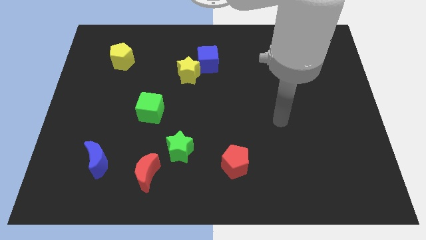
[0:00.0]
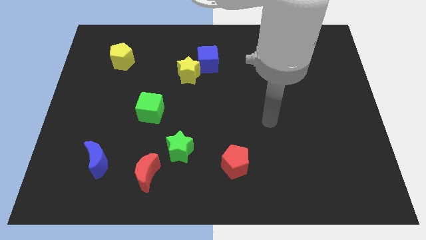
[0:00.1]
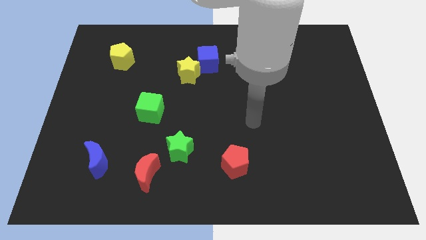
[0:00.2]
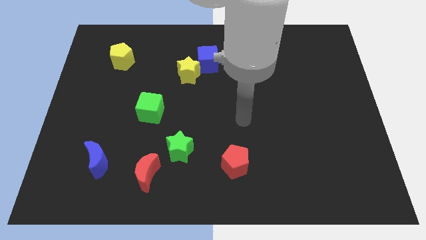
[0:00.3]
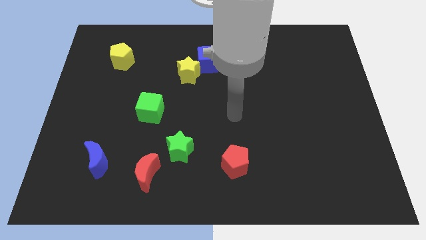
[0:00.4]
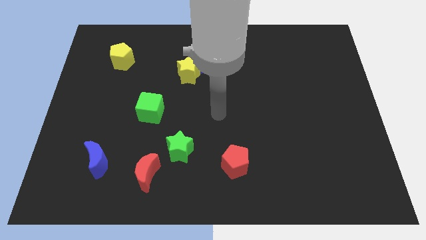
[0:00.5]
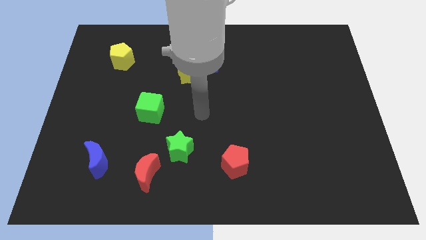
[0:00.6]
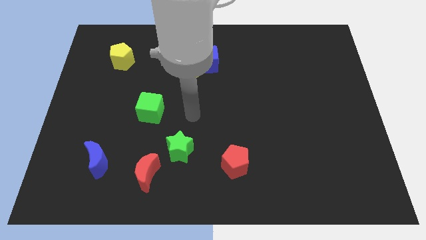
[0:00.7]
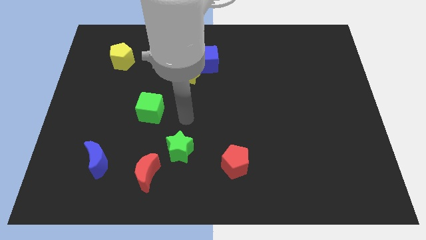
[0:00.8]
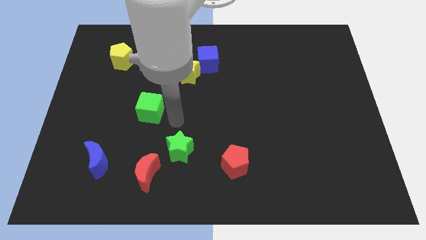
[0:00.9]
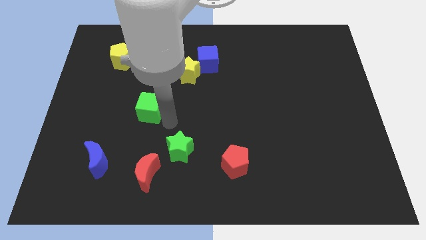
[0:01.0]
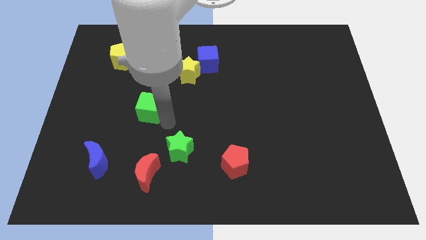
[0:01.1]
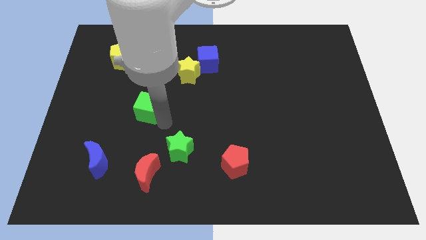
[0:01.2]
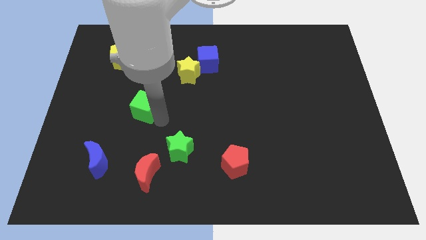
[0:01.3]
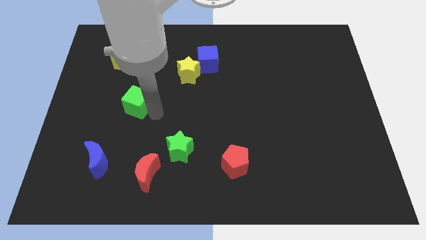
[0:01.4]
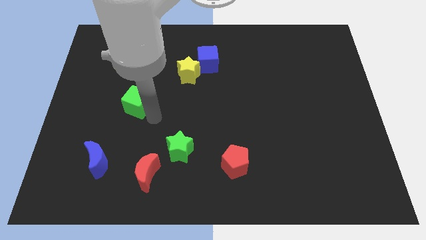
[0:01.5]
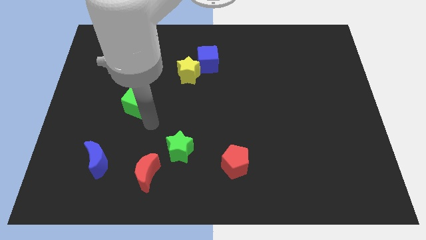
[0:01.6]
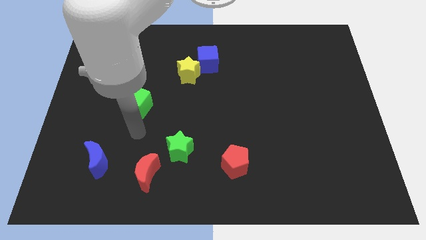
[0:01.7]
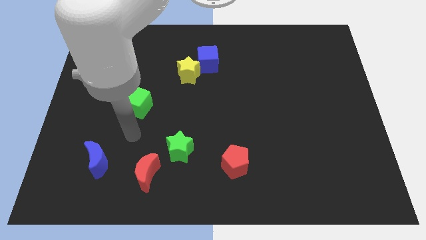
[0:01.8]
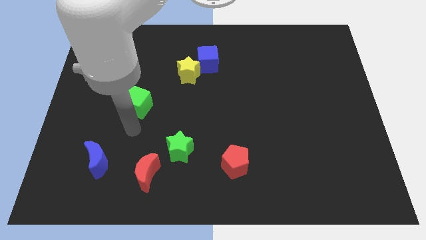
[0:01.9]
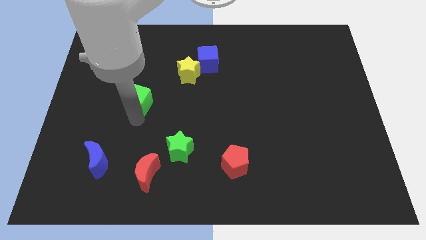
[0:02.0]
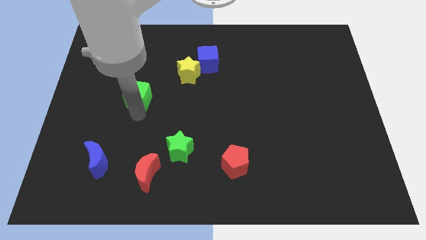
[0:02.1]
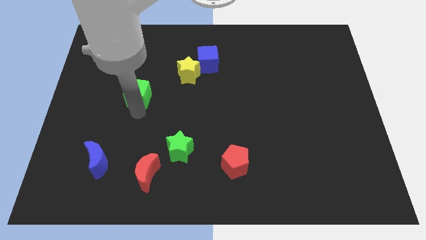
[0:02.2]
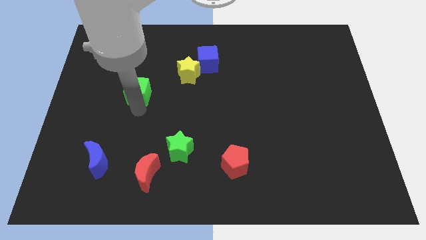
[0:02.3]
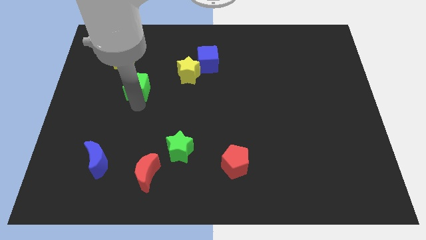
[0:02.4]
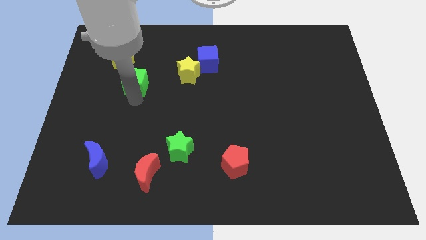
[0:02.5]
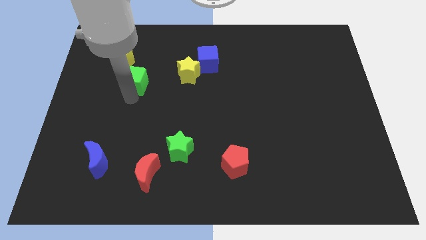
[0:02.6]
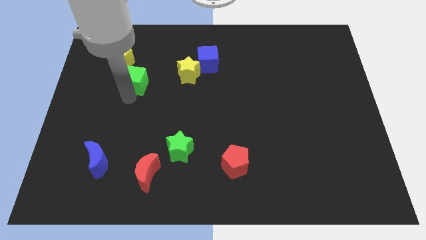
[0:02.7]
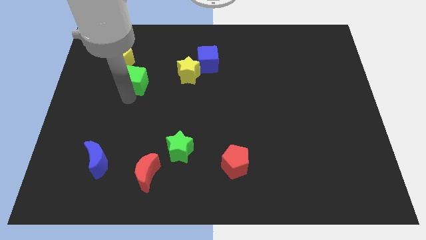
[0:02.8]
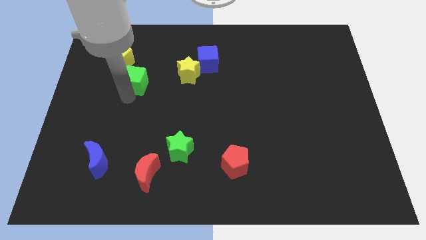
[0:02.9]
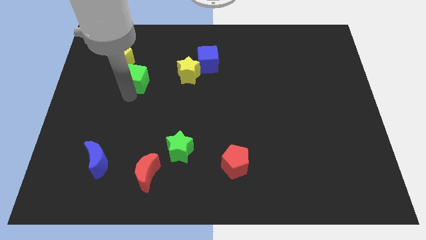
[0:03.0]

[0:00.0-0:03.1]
move green cube towards yellow pentagon

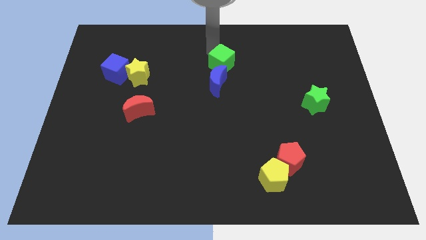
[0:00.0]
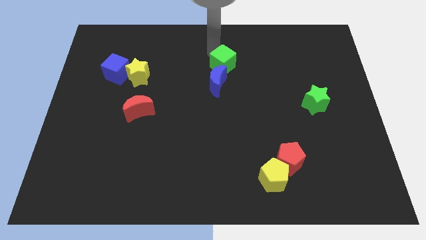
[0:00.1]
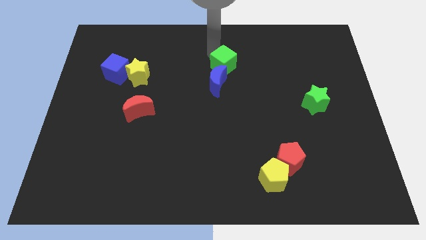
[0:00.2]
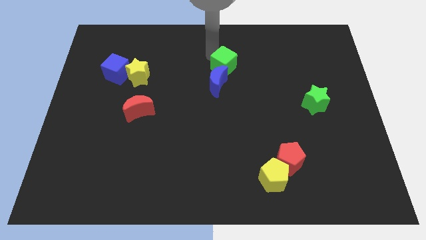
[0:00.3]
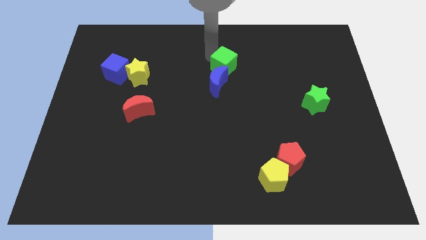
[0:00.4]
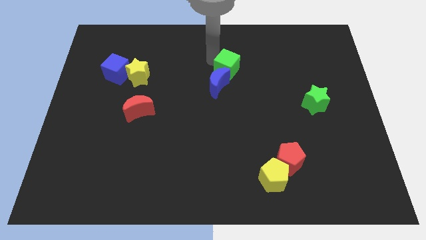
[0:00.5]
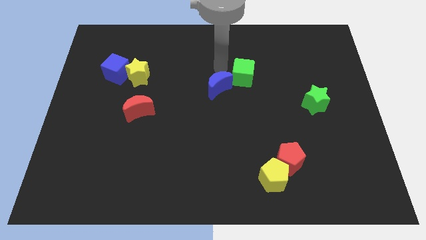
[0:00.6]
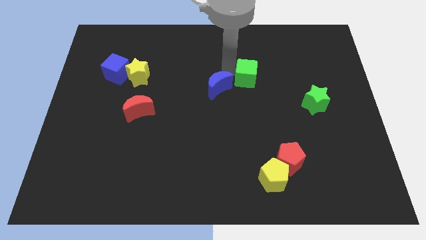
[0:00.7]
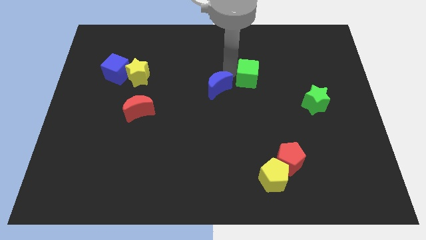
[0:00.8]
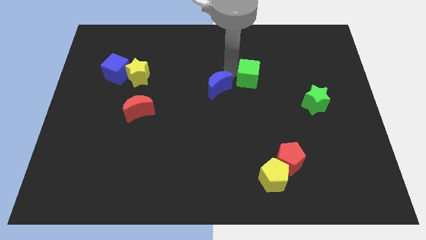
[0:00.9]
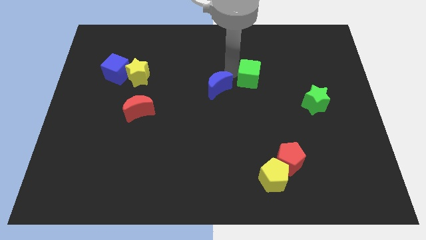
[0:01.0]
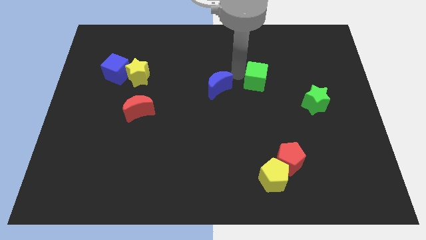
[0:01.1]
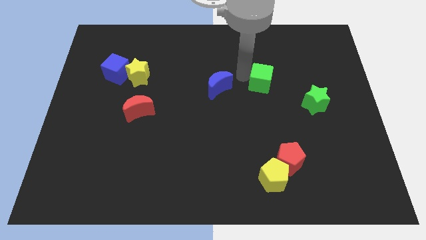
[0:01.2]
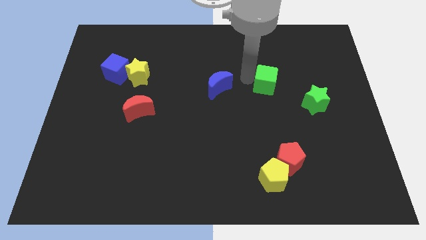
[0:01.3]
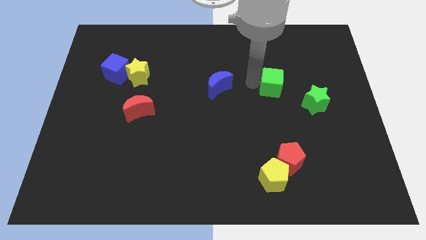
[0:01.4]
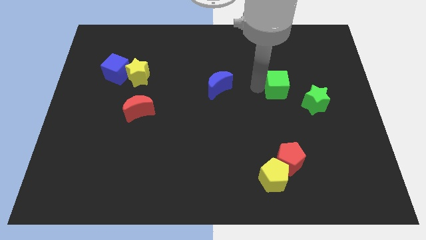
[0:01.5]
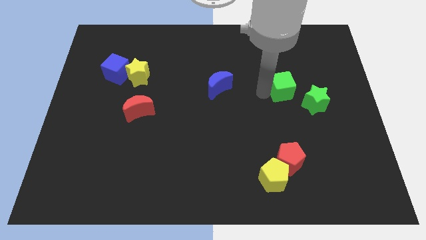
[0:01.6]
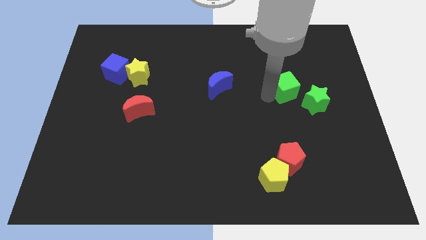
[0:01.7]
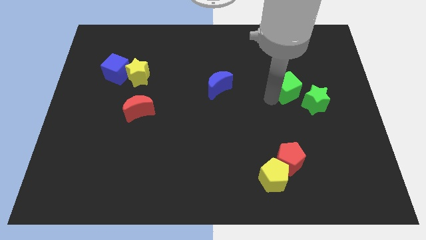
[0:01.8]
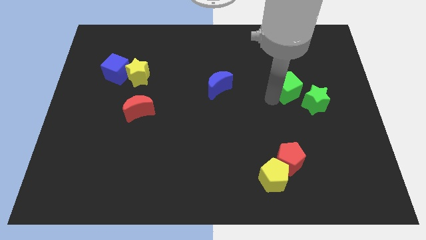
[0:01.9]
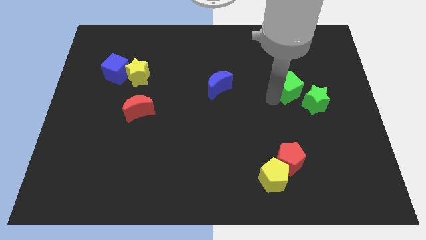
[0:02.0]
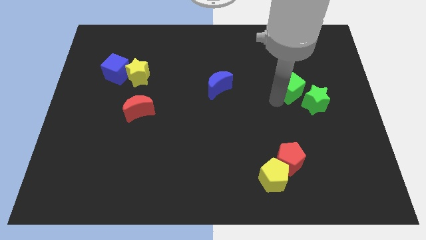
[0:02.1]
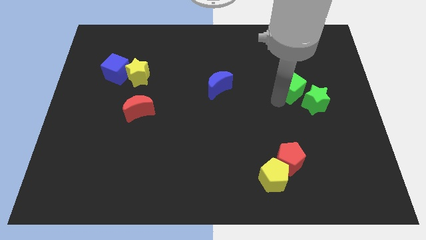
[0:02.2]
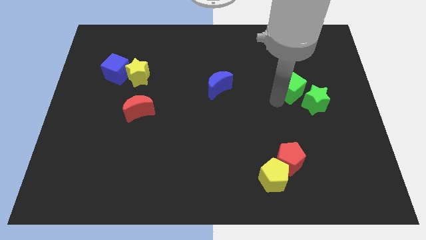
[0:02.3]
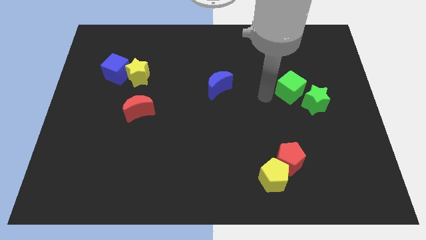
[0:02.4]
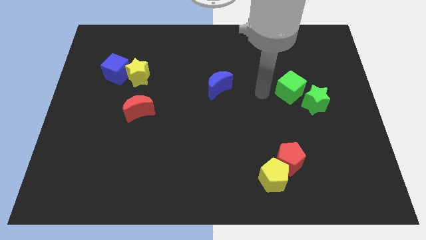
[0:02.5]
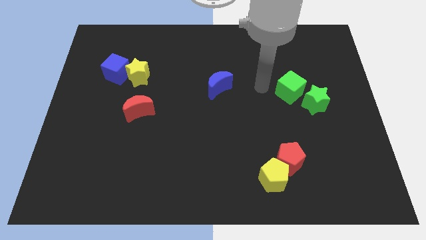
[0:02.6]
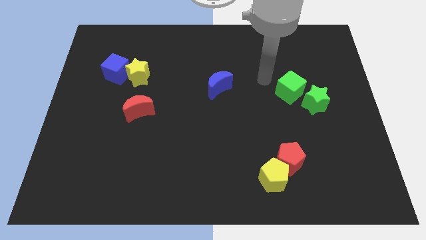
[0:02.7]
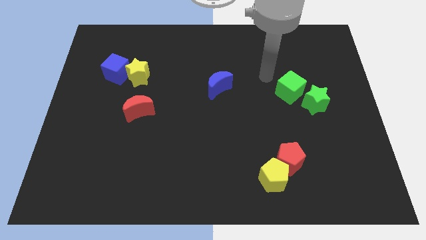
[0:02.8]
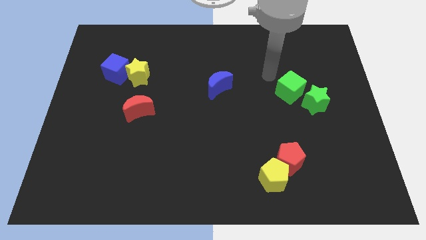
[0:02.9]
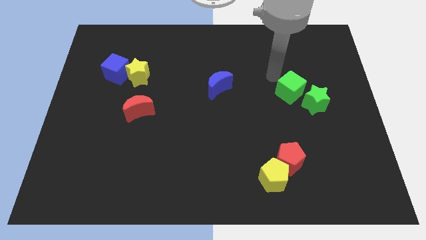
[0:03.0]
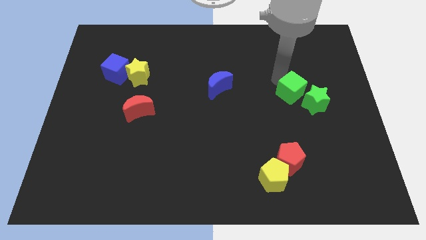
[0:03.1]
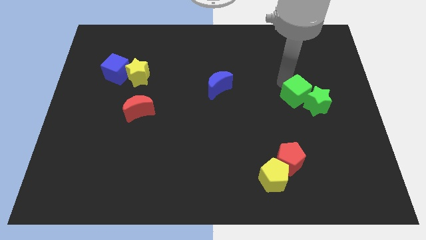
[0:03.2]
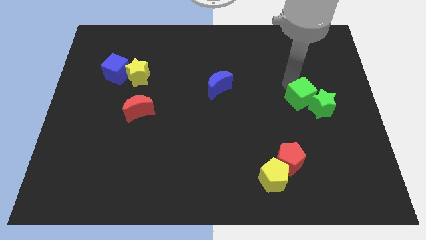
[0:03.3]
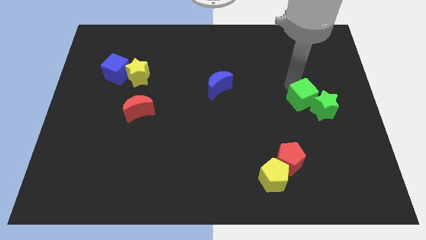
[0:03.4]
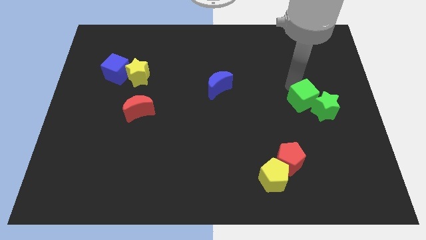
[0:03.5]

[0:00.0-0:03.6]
move the green cube into the green star

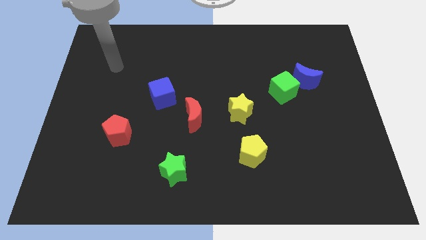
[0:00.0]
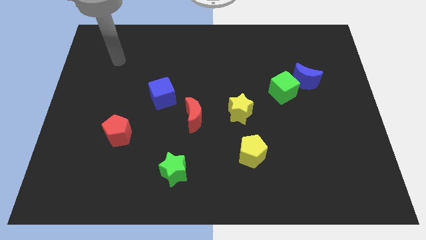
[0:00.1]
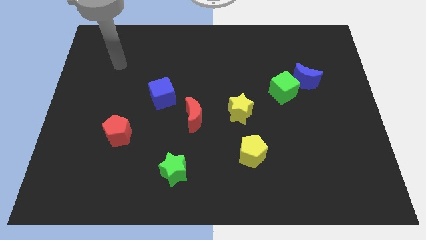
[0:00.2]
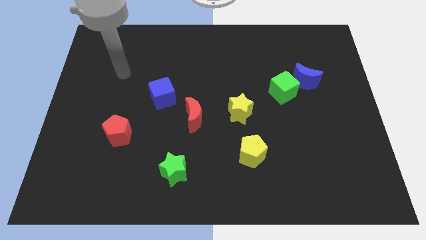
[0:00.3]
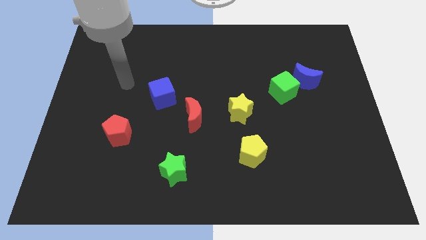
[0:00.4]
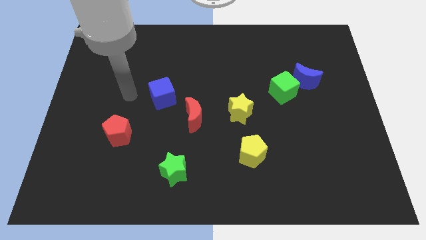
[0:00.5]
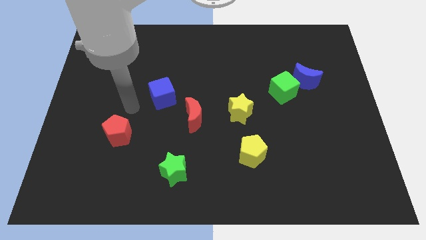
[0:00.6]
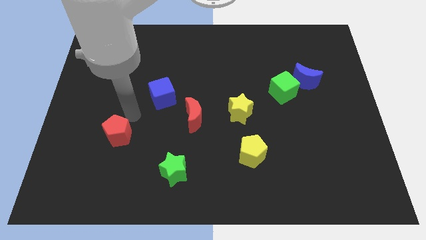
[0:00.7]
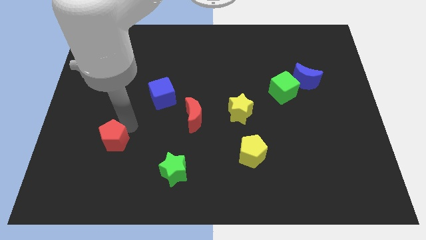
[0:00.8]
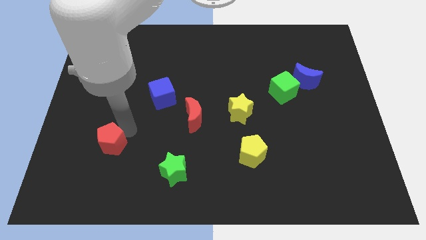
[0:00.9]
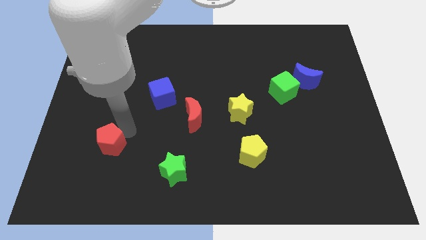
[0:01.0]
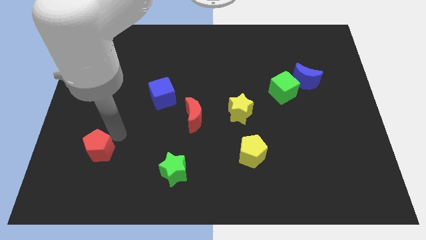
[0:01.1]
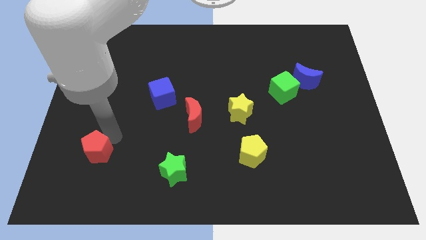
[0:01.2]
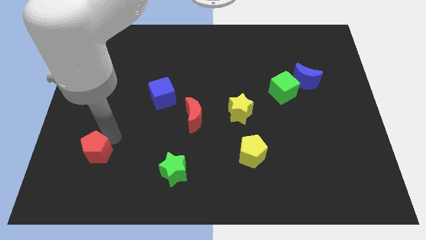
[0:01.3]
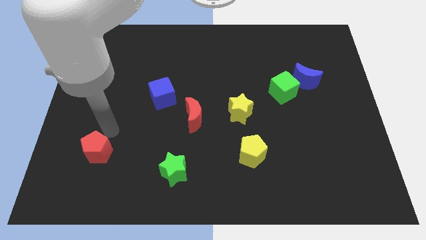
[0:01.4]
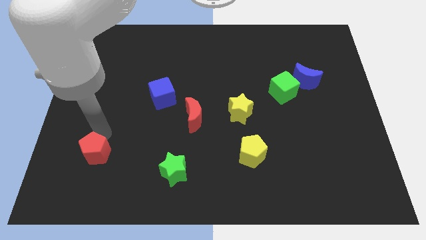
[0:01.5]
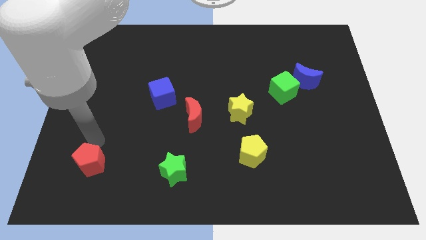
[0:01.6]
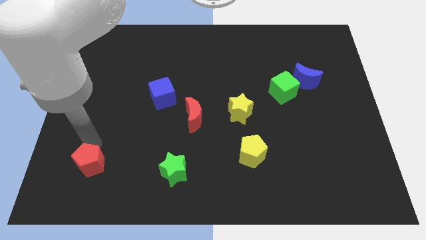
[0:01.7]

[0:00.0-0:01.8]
slide the red pentagon to the left of the green star

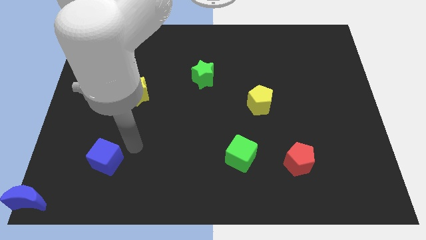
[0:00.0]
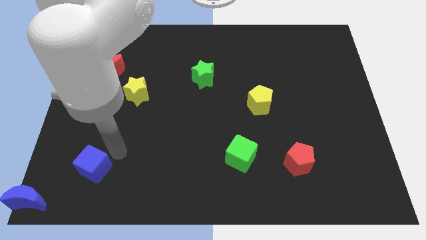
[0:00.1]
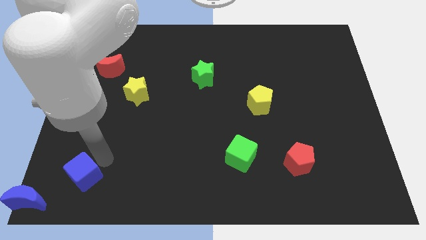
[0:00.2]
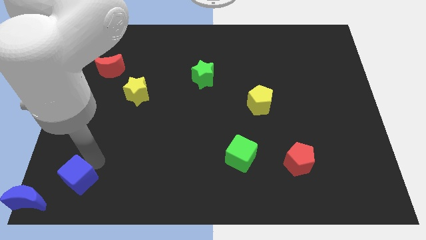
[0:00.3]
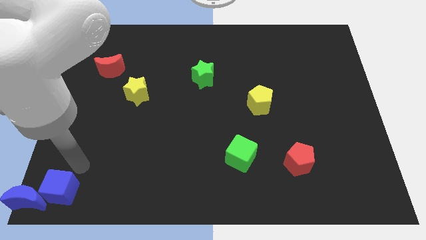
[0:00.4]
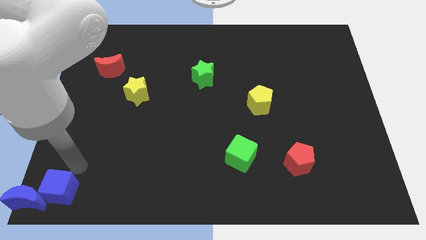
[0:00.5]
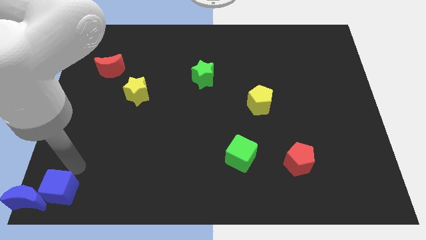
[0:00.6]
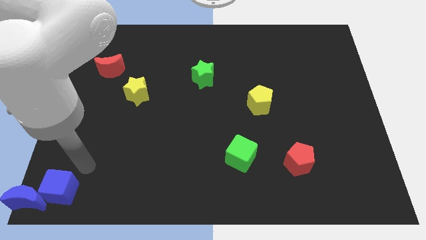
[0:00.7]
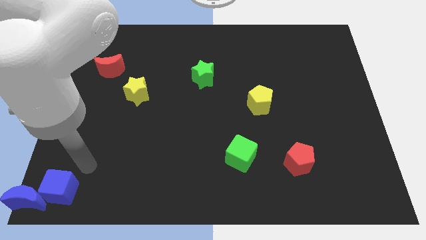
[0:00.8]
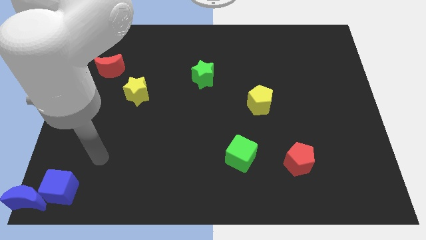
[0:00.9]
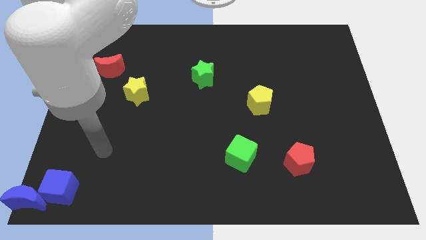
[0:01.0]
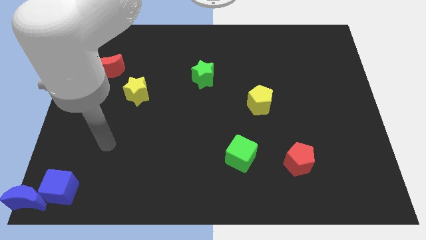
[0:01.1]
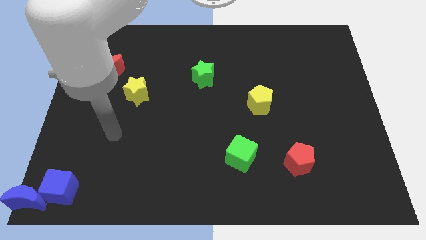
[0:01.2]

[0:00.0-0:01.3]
push the blue cube into the top side of the blue crescent
